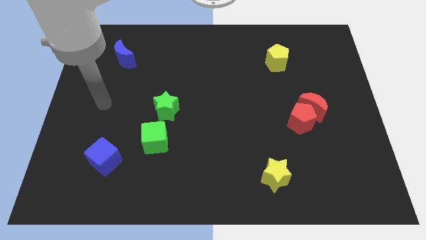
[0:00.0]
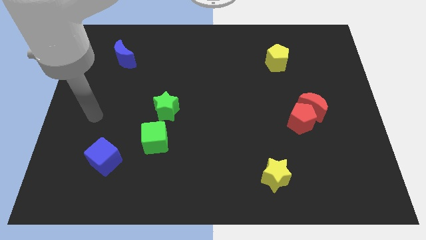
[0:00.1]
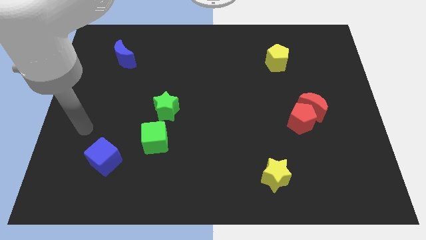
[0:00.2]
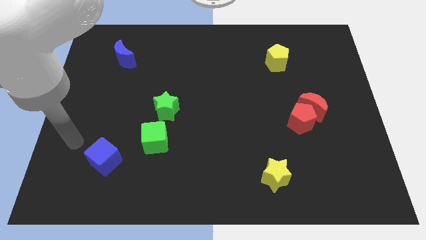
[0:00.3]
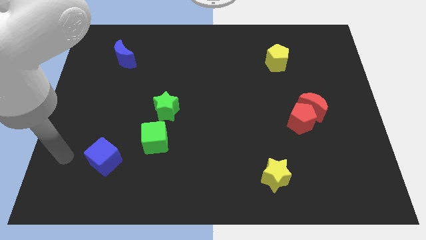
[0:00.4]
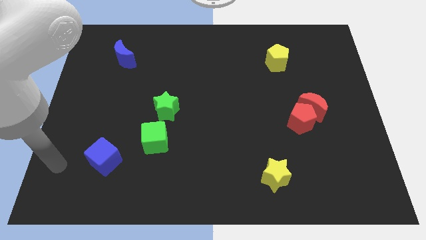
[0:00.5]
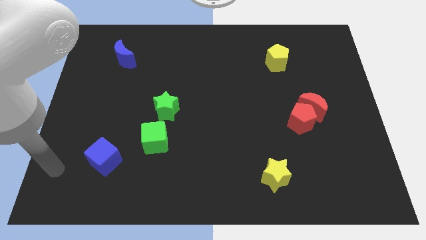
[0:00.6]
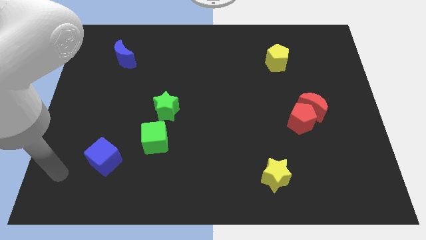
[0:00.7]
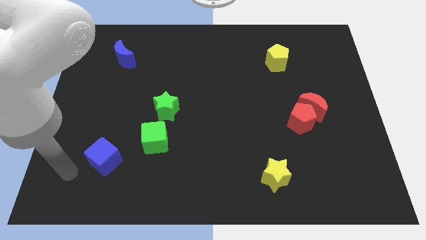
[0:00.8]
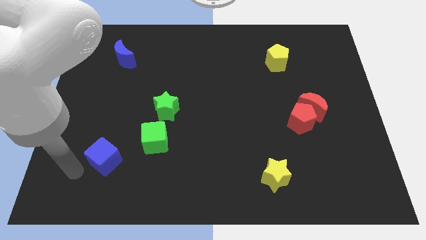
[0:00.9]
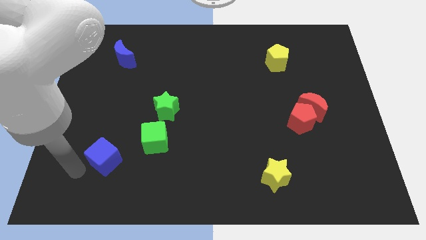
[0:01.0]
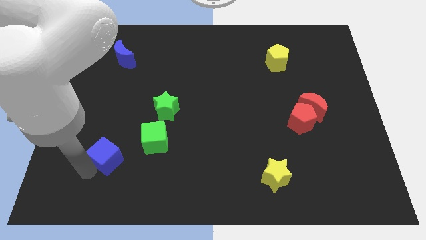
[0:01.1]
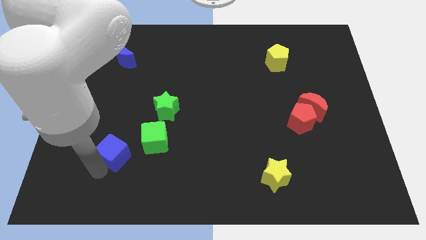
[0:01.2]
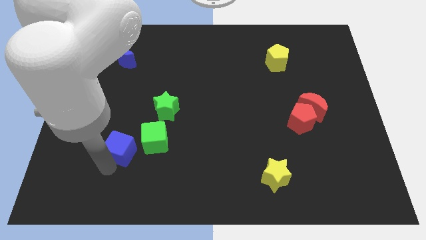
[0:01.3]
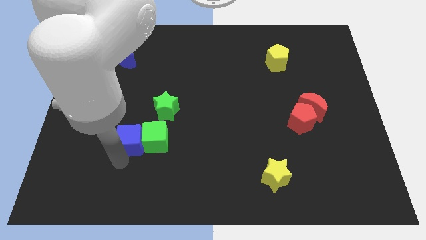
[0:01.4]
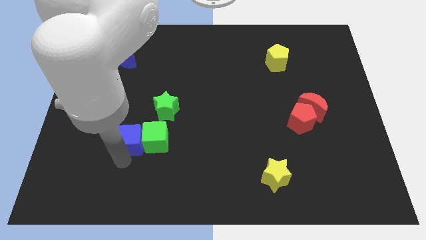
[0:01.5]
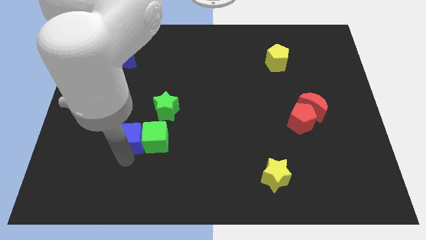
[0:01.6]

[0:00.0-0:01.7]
place the blue cube to the left side of the green cube

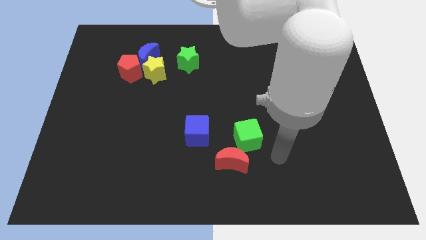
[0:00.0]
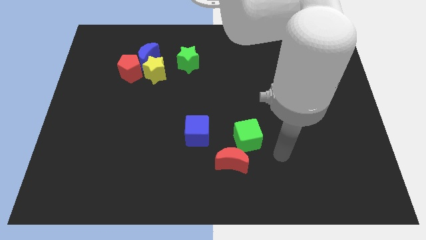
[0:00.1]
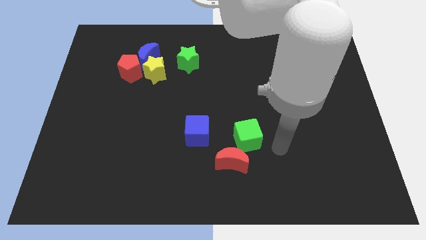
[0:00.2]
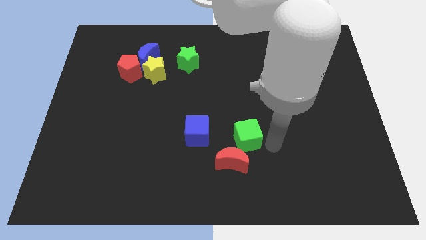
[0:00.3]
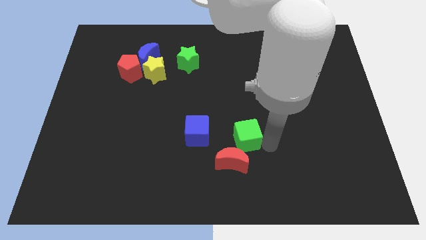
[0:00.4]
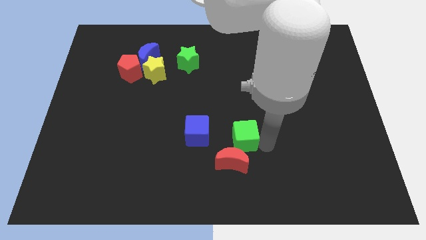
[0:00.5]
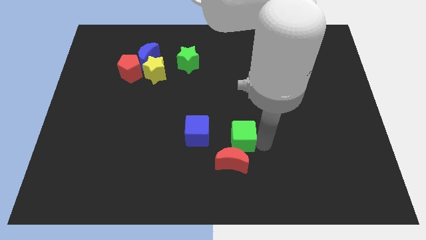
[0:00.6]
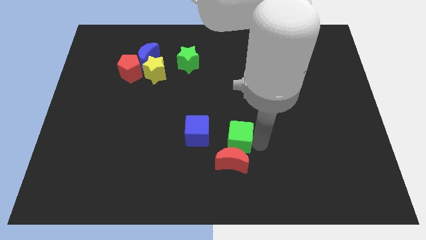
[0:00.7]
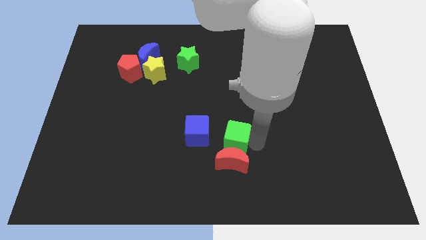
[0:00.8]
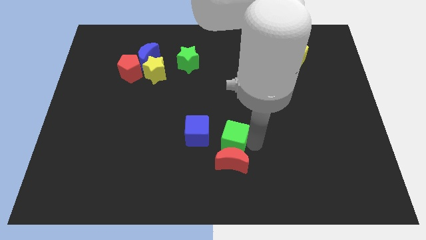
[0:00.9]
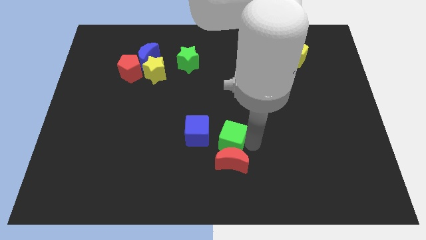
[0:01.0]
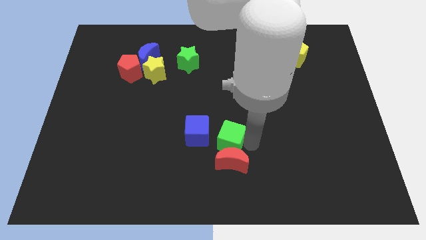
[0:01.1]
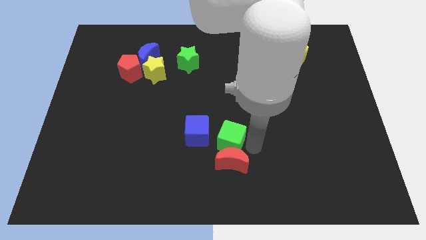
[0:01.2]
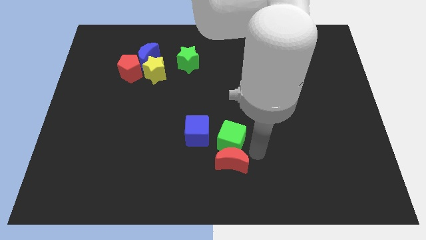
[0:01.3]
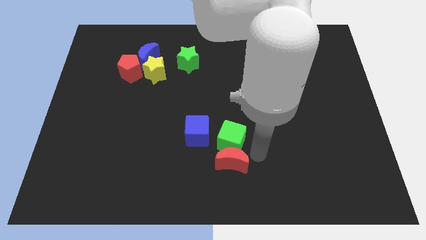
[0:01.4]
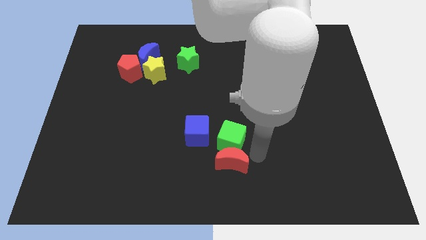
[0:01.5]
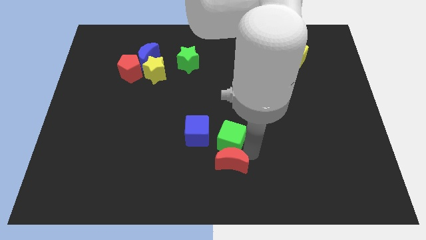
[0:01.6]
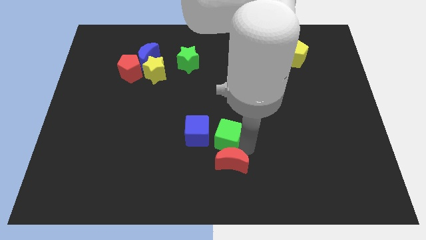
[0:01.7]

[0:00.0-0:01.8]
move the green cube above the red moon

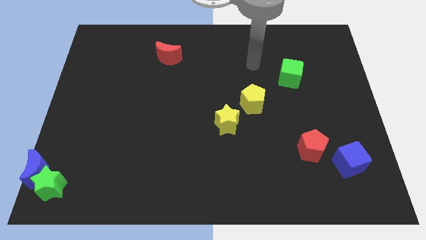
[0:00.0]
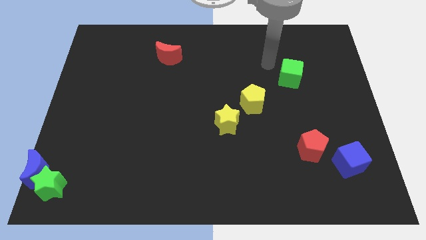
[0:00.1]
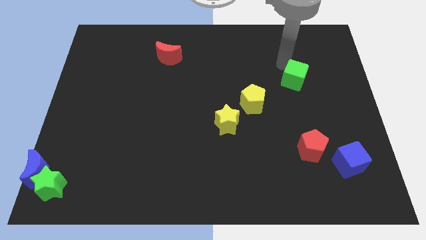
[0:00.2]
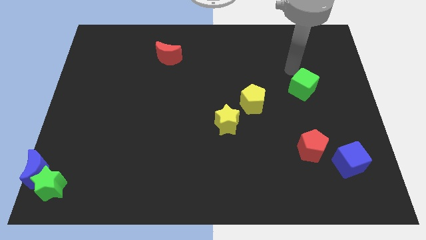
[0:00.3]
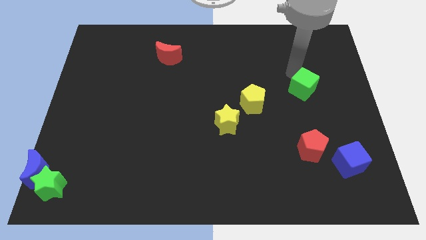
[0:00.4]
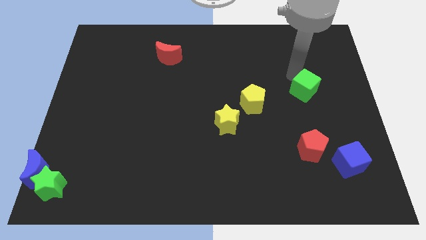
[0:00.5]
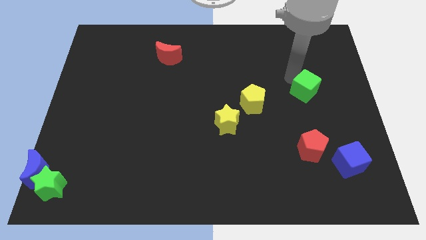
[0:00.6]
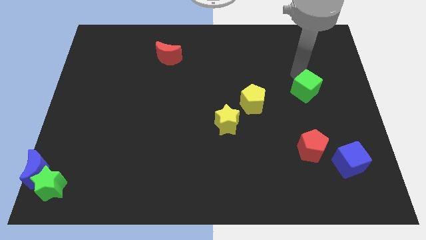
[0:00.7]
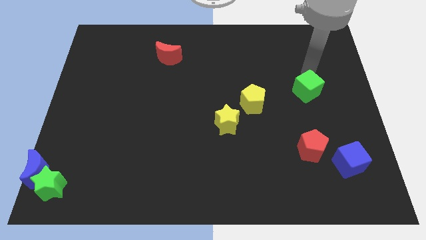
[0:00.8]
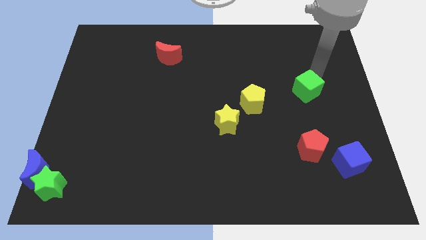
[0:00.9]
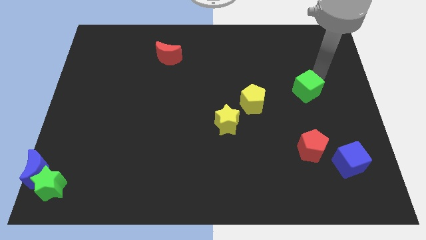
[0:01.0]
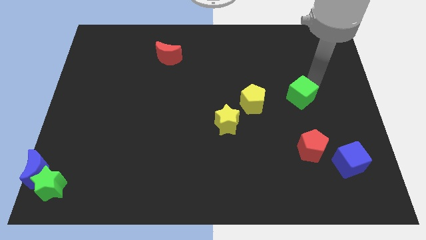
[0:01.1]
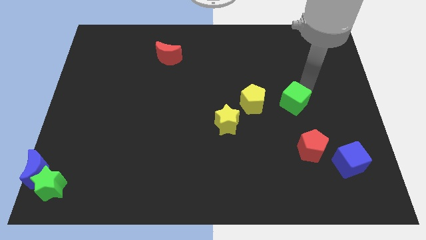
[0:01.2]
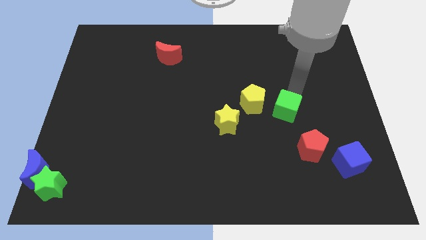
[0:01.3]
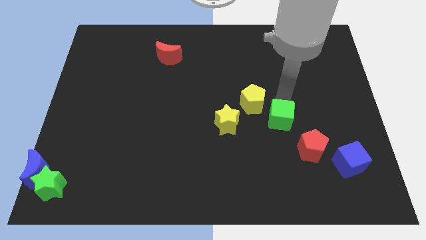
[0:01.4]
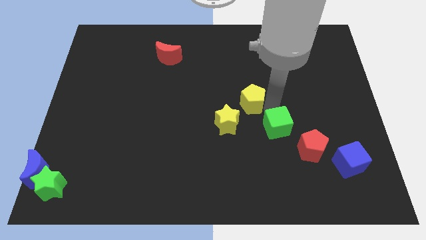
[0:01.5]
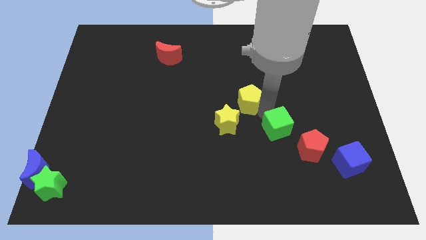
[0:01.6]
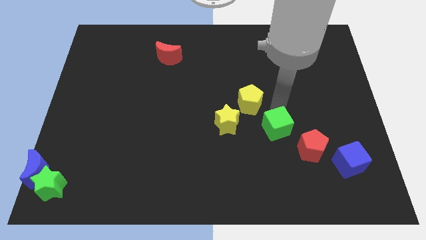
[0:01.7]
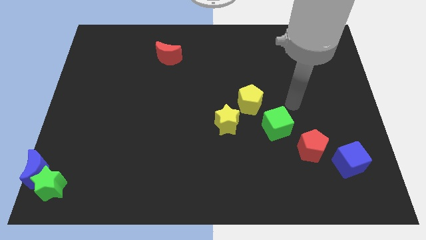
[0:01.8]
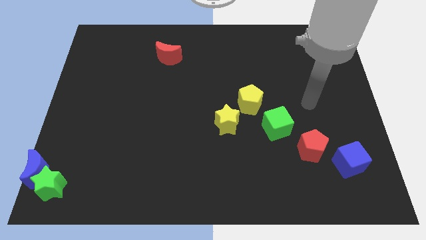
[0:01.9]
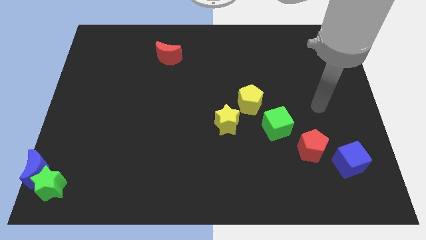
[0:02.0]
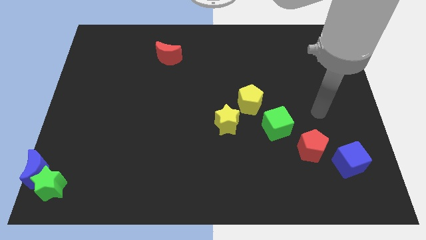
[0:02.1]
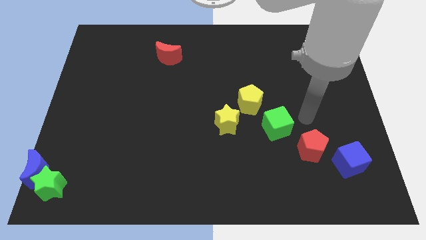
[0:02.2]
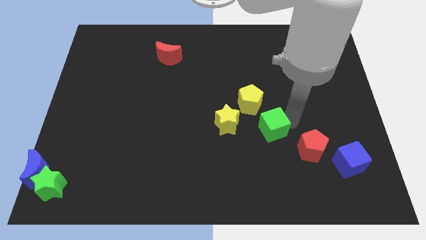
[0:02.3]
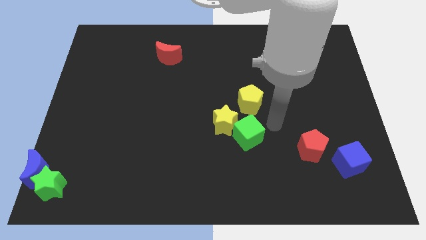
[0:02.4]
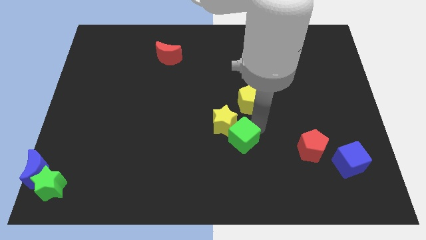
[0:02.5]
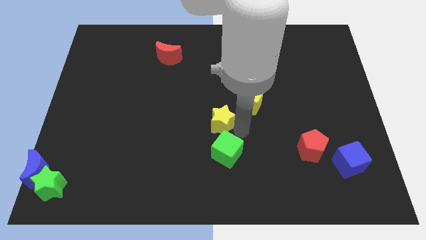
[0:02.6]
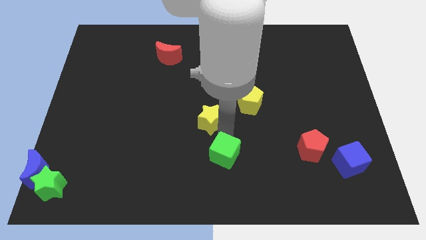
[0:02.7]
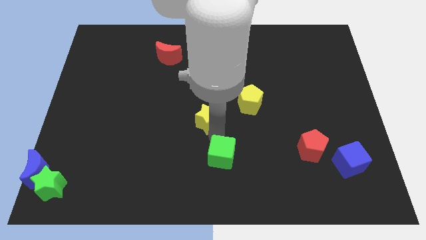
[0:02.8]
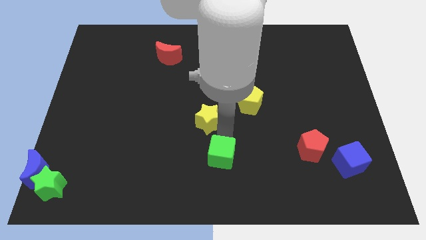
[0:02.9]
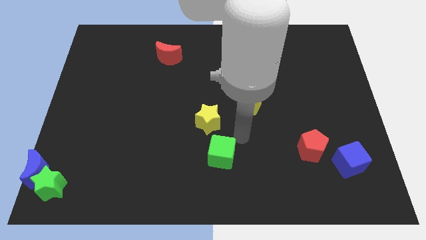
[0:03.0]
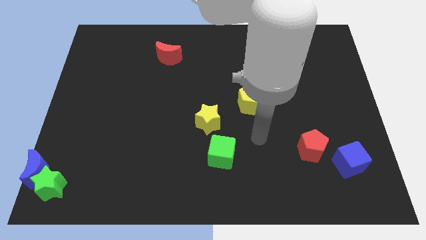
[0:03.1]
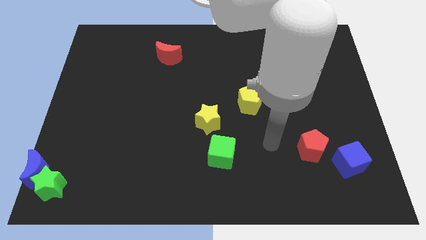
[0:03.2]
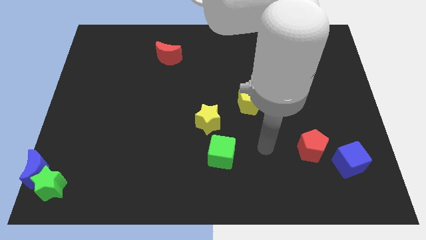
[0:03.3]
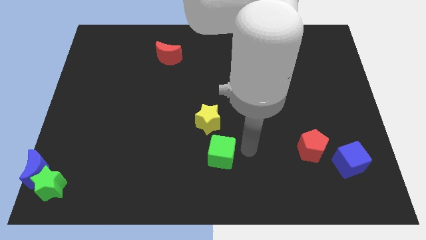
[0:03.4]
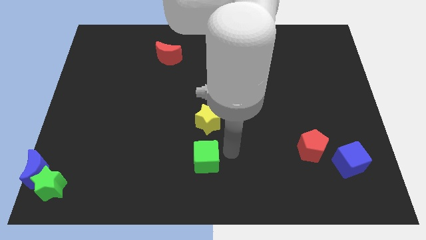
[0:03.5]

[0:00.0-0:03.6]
move the green cube to the bottom side of the yellow star

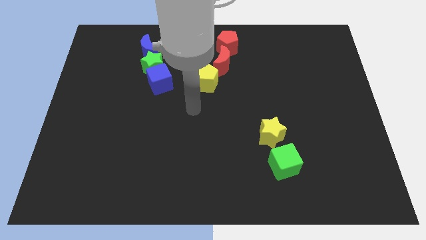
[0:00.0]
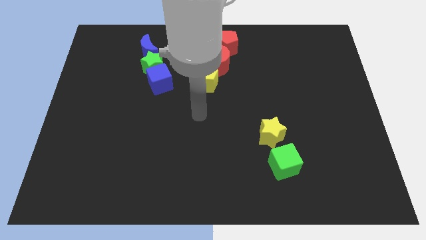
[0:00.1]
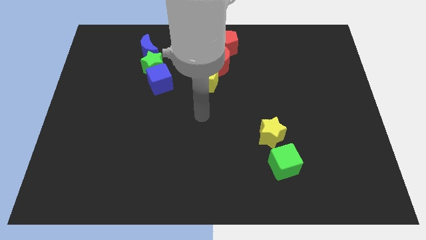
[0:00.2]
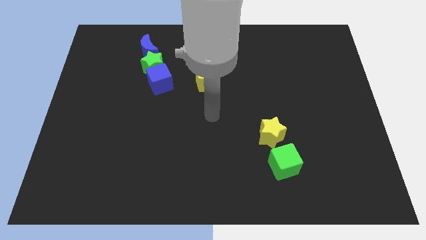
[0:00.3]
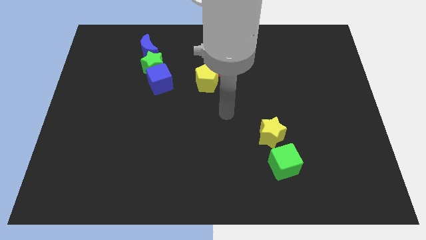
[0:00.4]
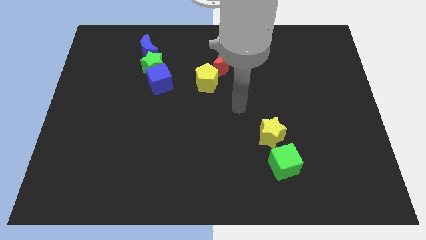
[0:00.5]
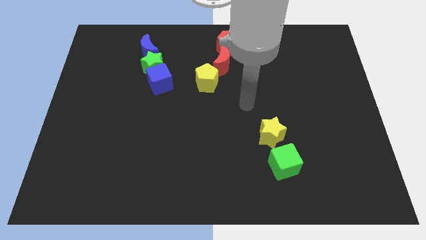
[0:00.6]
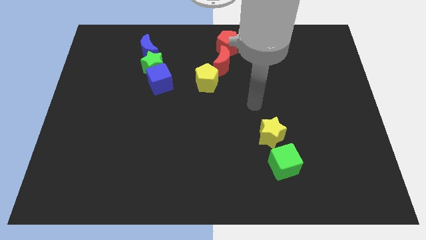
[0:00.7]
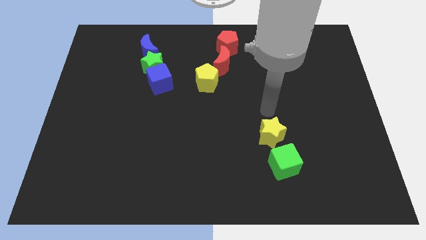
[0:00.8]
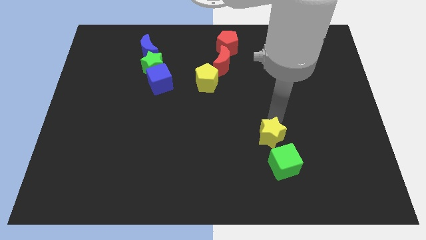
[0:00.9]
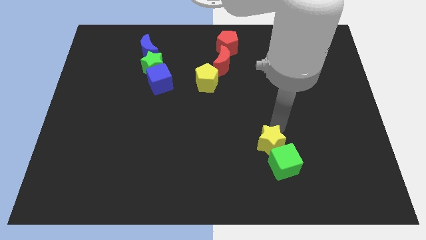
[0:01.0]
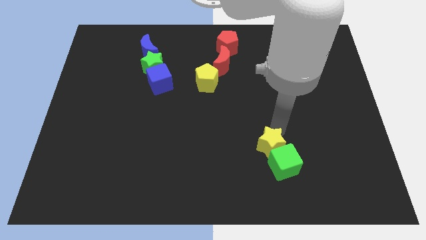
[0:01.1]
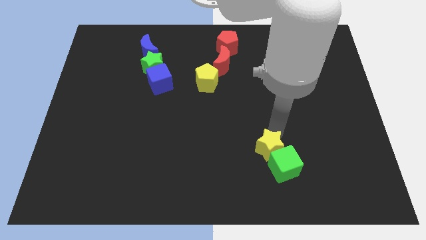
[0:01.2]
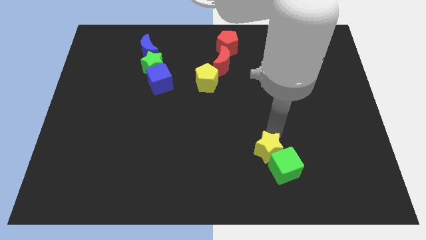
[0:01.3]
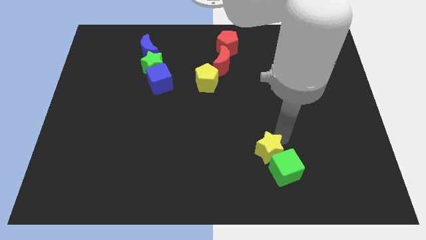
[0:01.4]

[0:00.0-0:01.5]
move the yellow star into the green cube

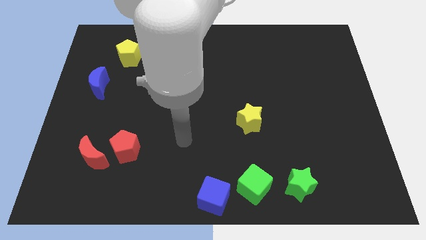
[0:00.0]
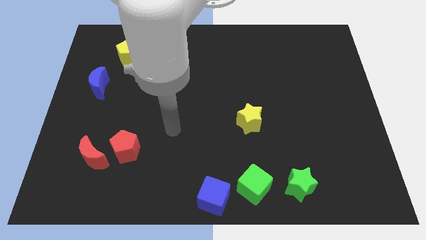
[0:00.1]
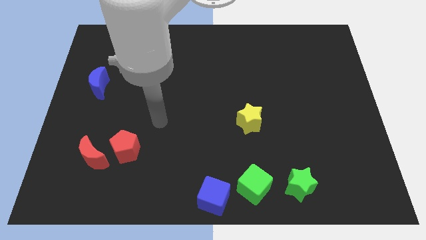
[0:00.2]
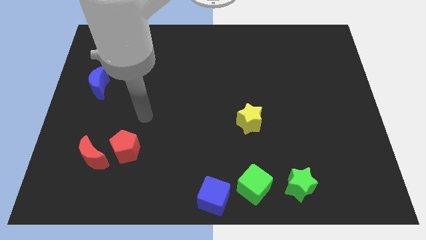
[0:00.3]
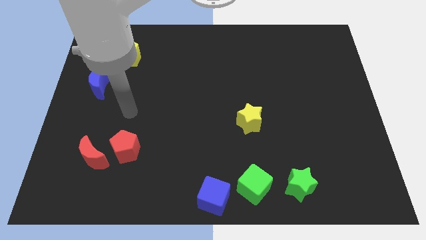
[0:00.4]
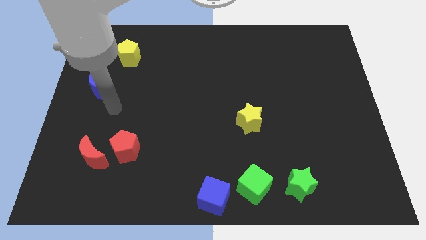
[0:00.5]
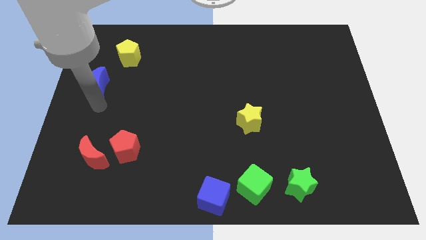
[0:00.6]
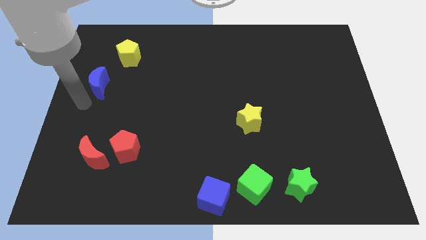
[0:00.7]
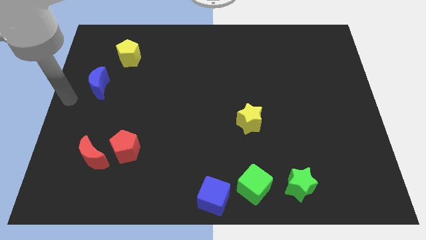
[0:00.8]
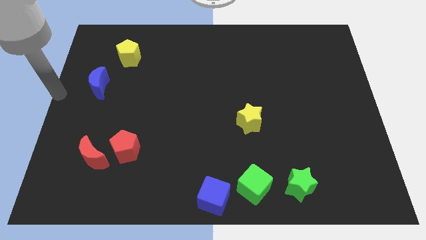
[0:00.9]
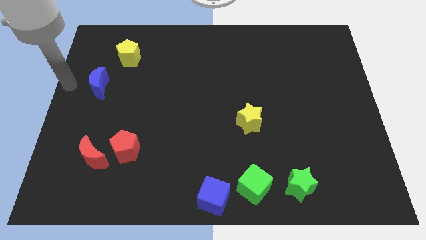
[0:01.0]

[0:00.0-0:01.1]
place your hand at the left side of the blue crescent
